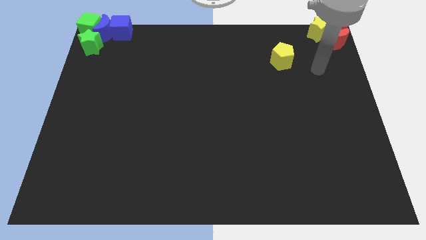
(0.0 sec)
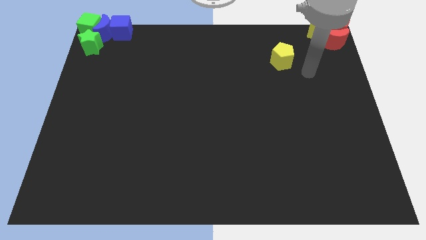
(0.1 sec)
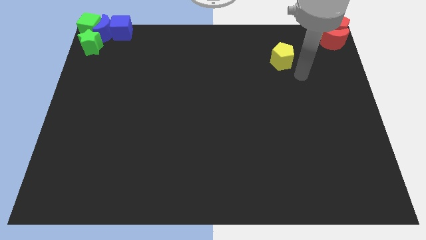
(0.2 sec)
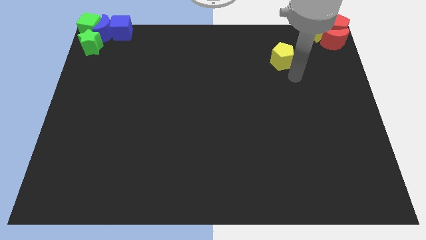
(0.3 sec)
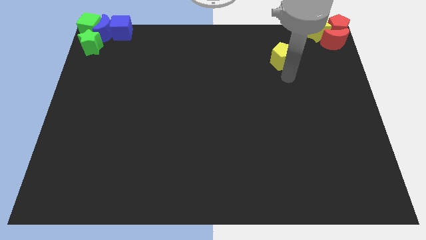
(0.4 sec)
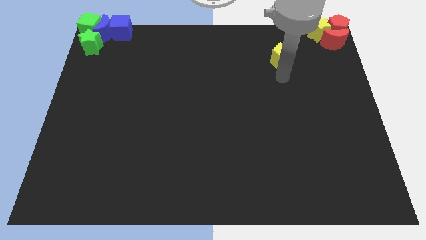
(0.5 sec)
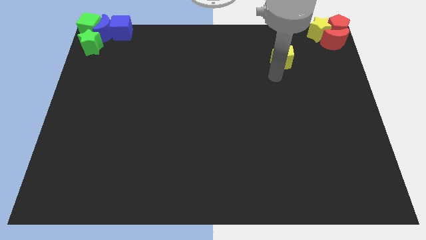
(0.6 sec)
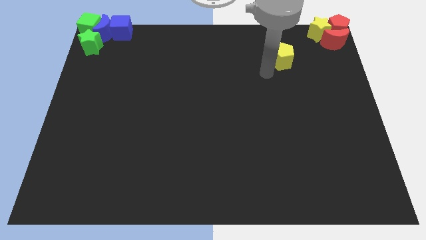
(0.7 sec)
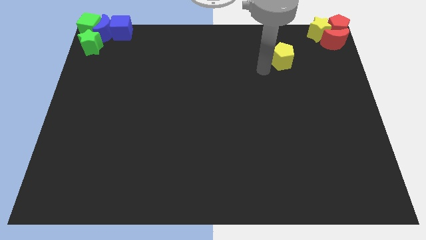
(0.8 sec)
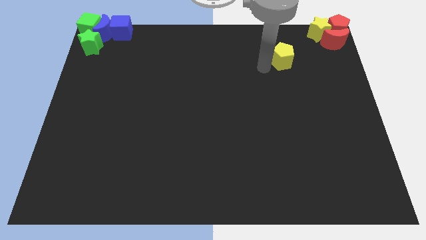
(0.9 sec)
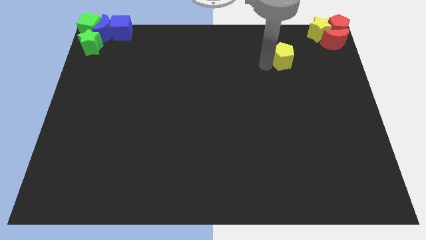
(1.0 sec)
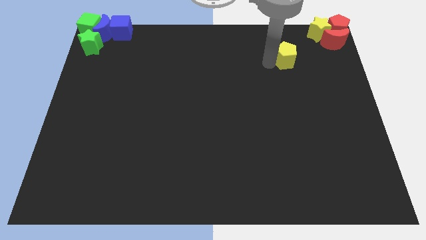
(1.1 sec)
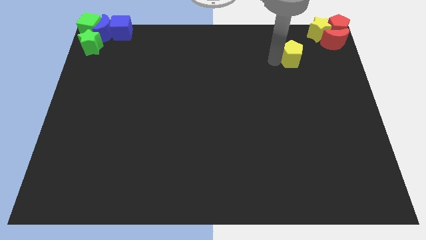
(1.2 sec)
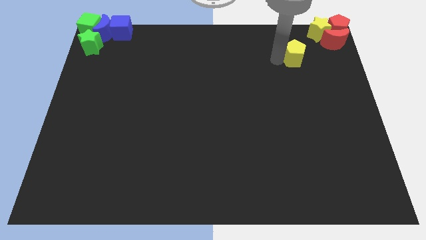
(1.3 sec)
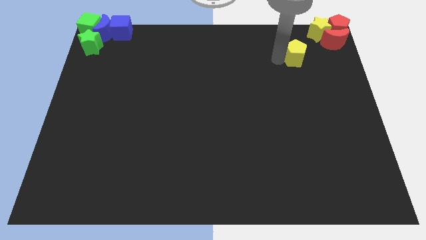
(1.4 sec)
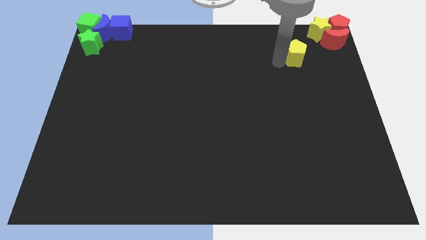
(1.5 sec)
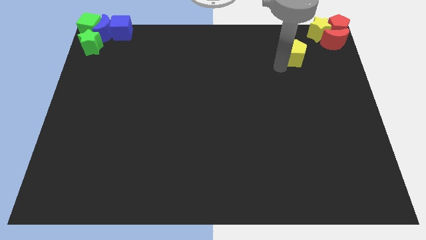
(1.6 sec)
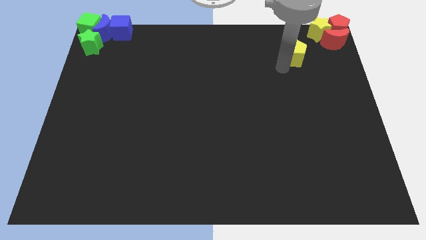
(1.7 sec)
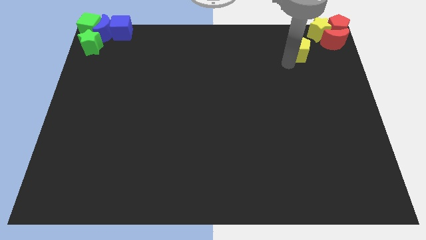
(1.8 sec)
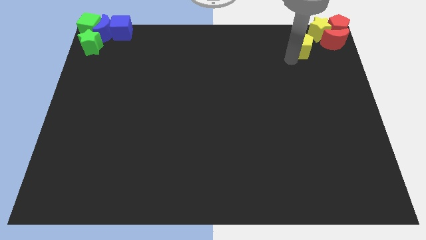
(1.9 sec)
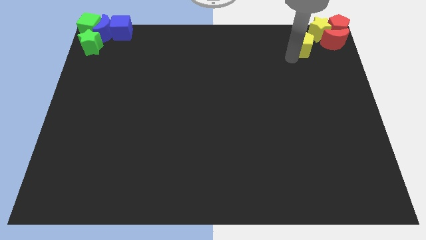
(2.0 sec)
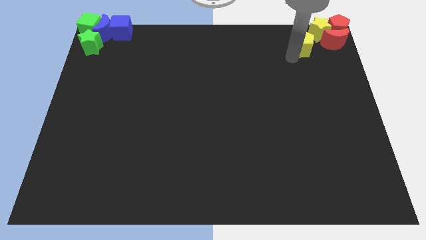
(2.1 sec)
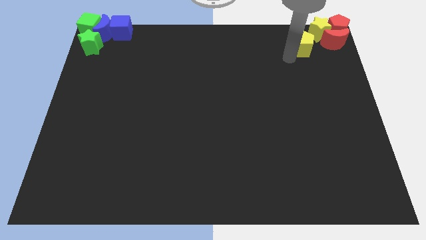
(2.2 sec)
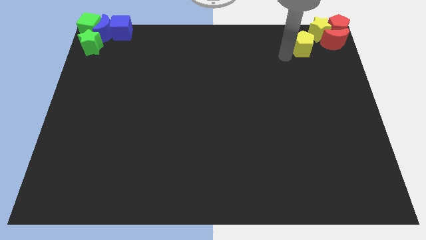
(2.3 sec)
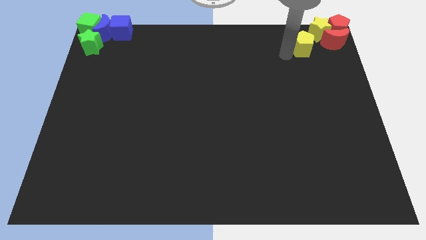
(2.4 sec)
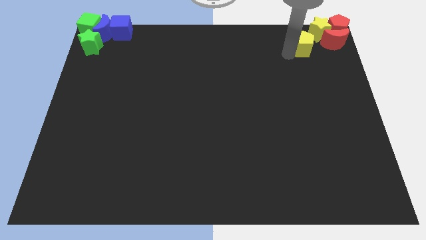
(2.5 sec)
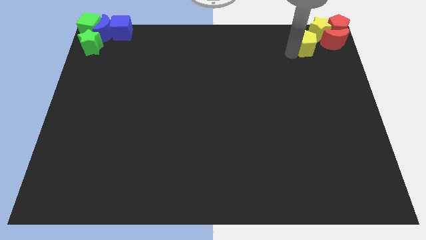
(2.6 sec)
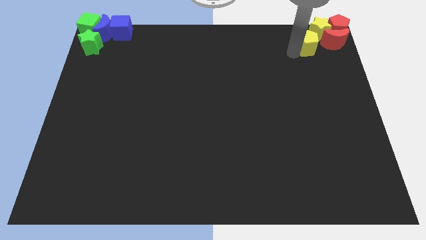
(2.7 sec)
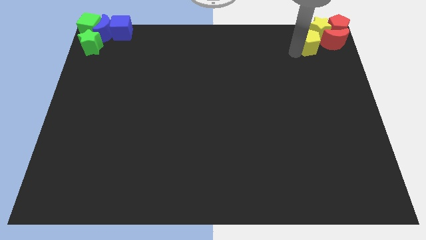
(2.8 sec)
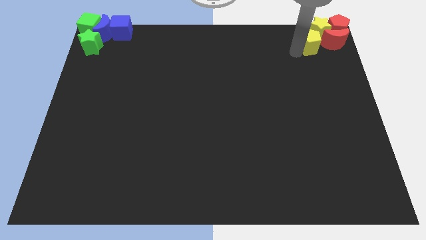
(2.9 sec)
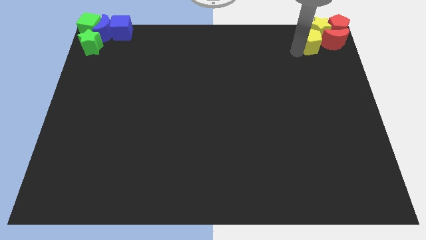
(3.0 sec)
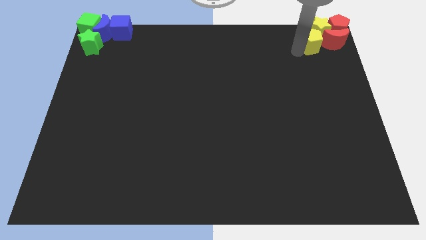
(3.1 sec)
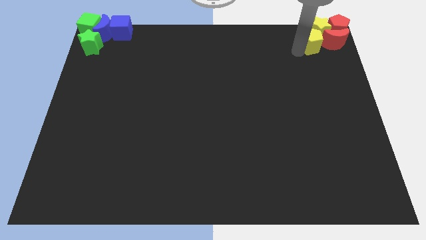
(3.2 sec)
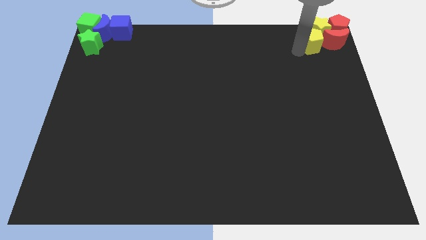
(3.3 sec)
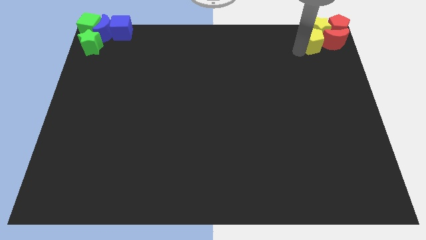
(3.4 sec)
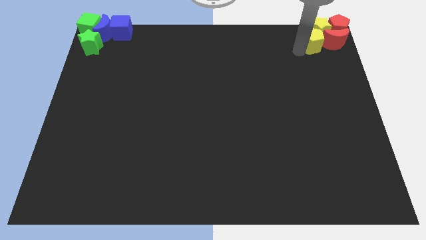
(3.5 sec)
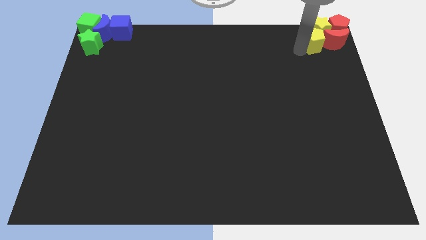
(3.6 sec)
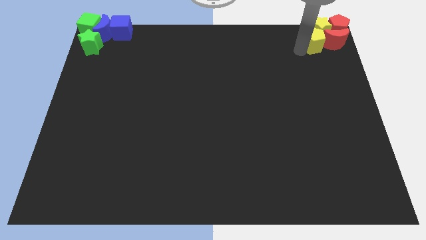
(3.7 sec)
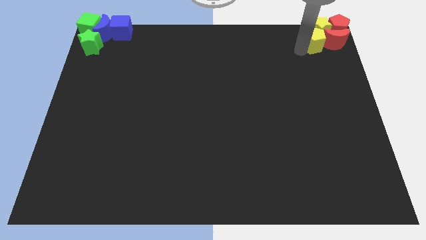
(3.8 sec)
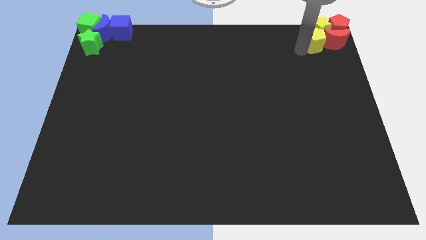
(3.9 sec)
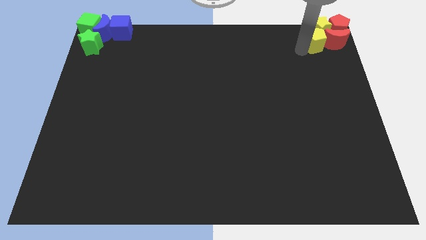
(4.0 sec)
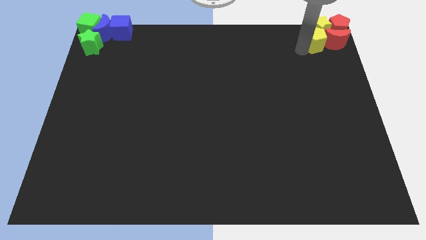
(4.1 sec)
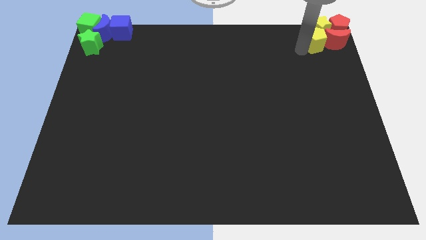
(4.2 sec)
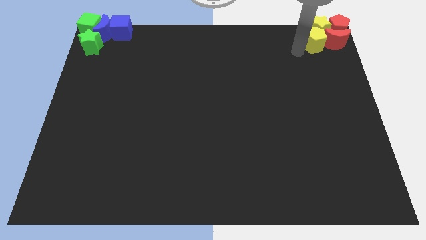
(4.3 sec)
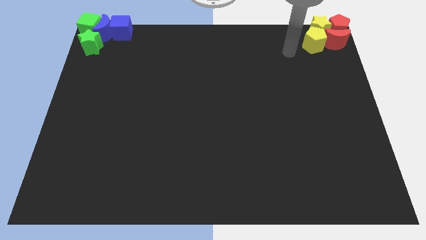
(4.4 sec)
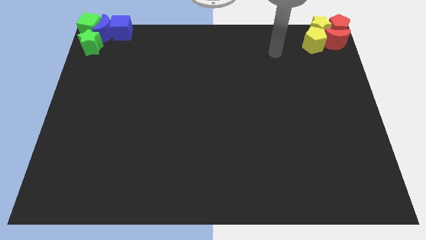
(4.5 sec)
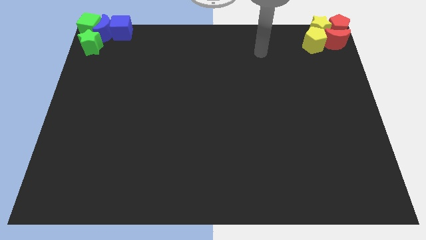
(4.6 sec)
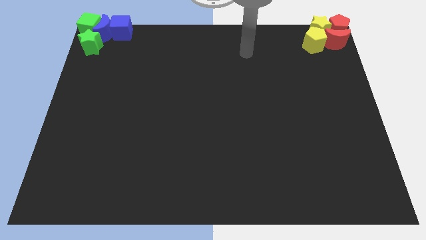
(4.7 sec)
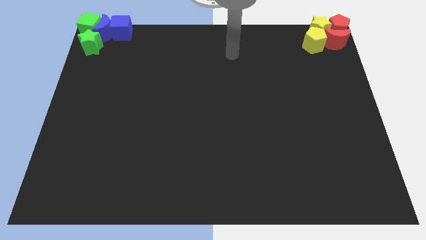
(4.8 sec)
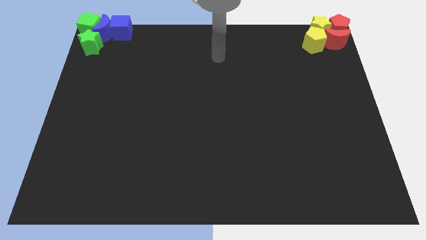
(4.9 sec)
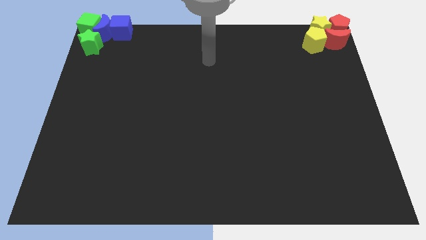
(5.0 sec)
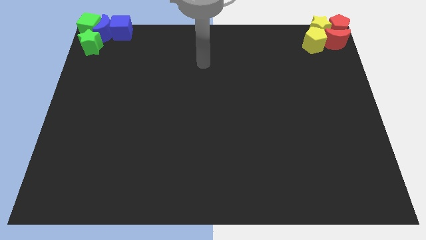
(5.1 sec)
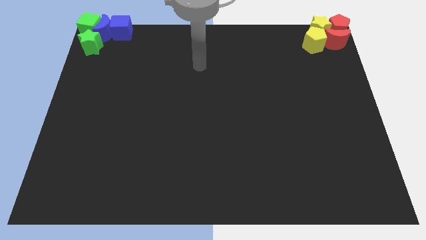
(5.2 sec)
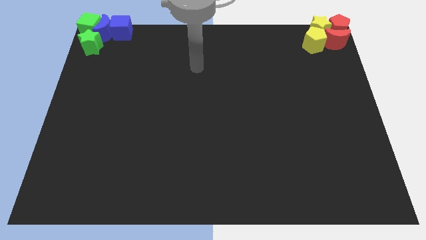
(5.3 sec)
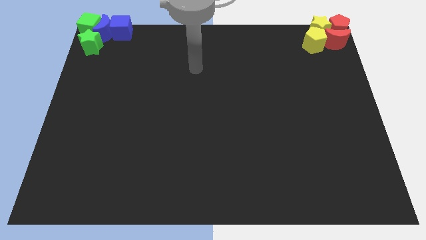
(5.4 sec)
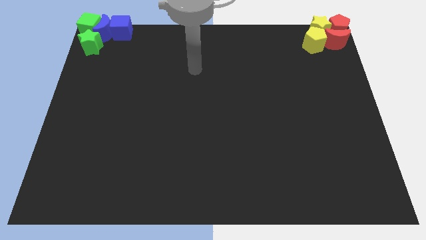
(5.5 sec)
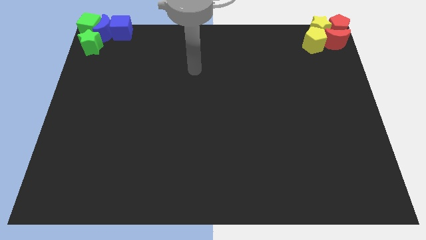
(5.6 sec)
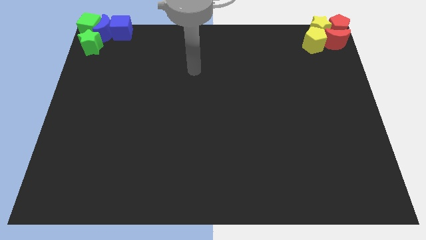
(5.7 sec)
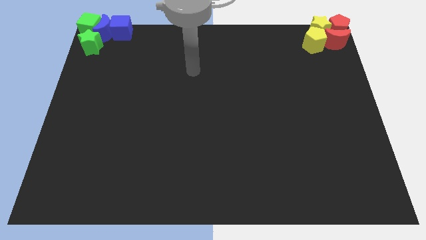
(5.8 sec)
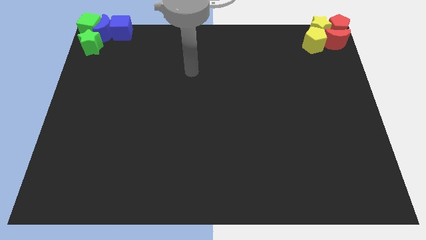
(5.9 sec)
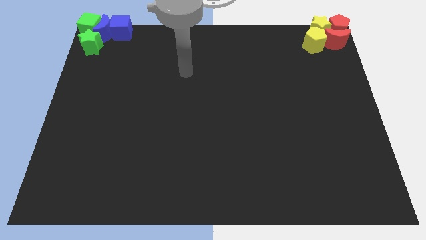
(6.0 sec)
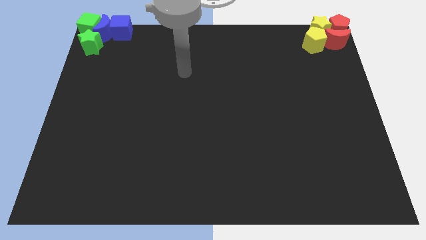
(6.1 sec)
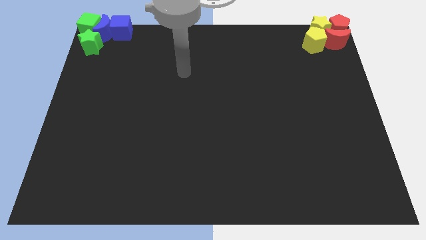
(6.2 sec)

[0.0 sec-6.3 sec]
push the yellow pentagon into the group of both the red blocks and the yellow star

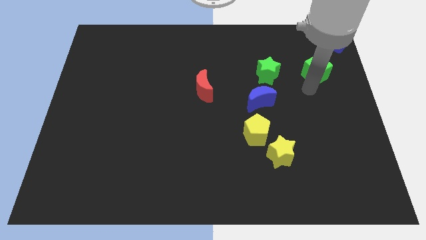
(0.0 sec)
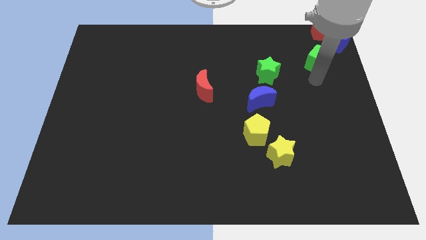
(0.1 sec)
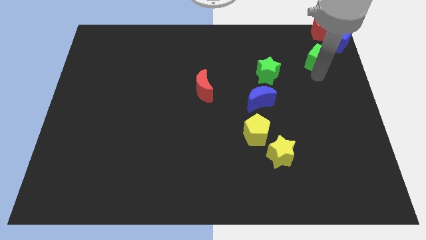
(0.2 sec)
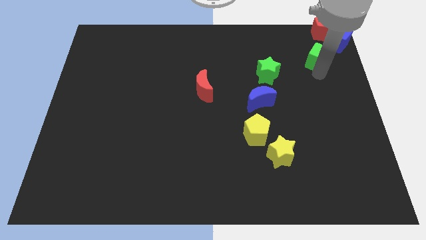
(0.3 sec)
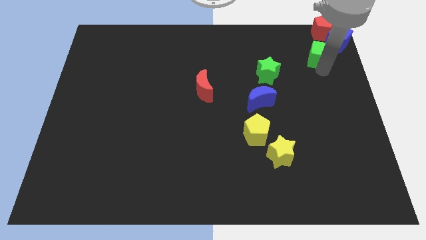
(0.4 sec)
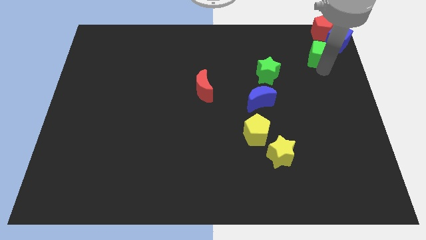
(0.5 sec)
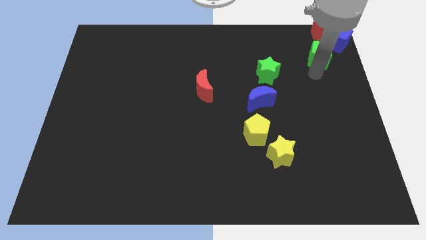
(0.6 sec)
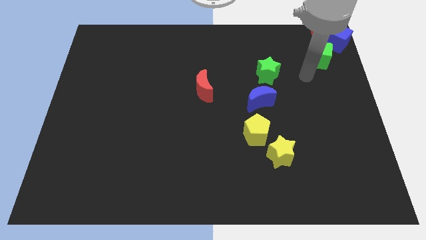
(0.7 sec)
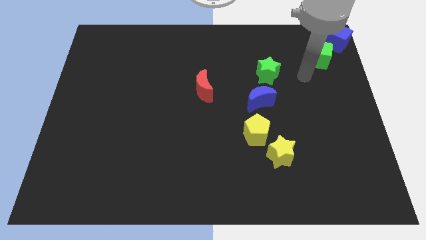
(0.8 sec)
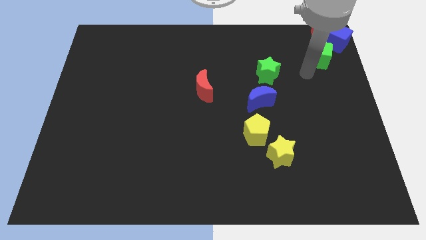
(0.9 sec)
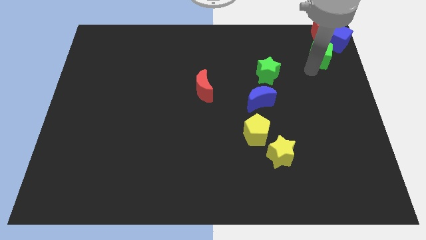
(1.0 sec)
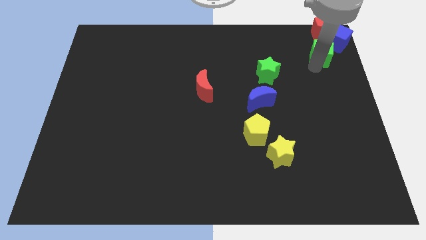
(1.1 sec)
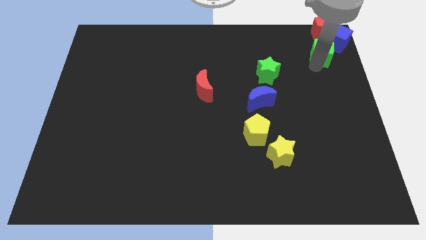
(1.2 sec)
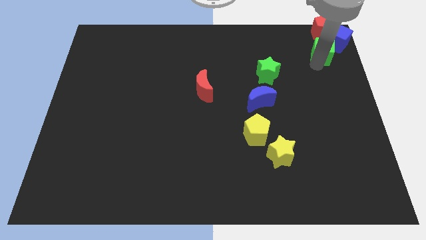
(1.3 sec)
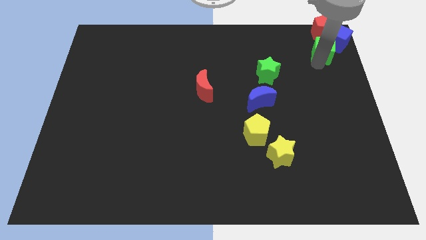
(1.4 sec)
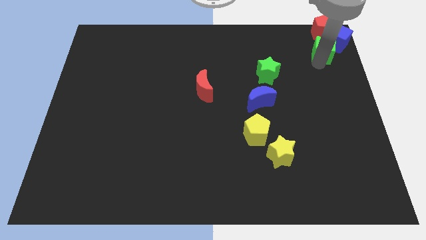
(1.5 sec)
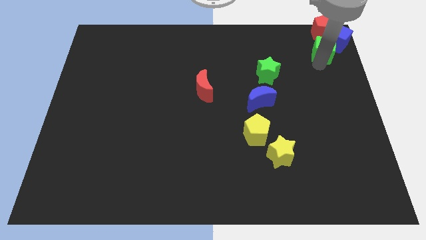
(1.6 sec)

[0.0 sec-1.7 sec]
push the green cube close to the blue cube

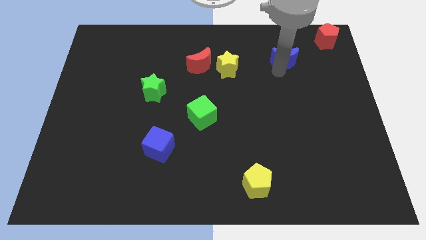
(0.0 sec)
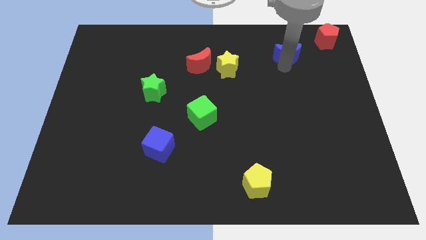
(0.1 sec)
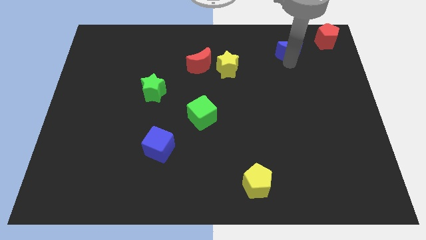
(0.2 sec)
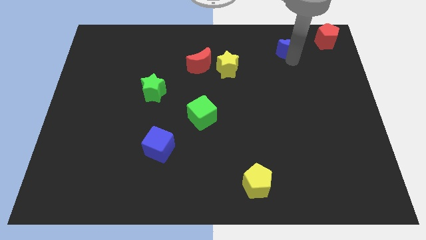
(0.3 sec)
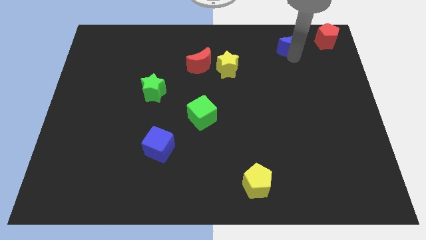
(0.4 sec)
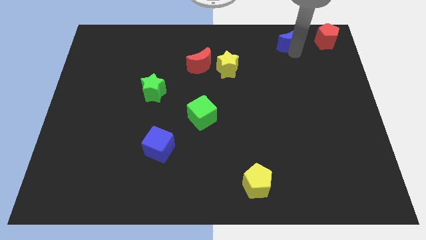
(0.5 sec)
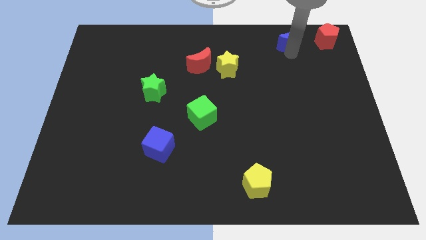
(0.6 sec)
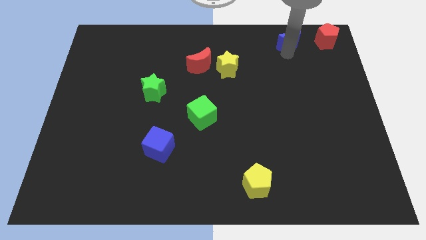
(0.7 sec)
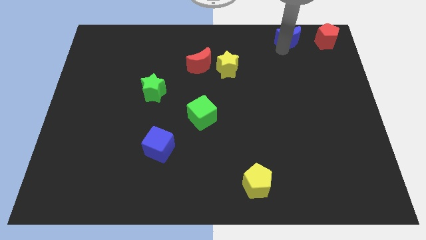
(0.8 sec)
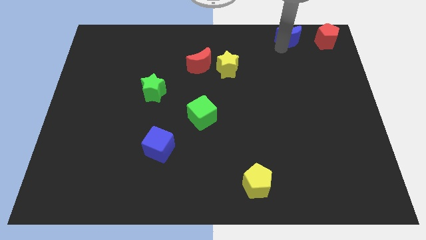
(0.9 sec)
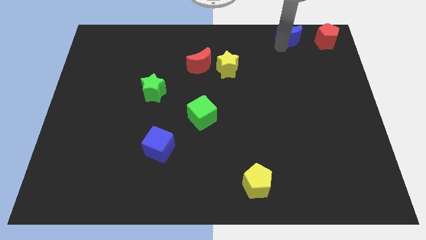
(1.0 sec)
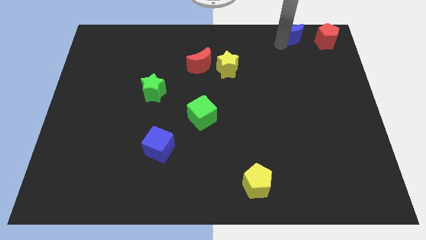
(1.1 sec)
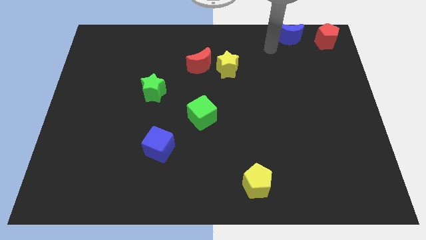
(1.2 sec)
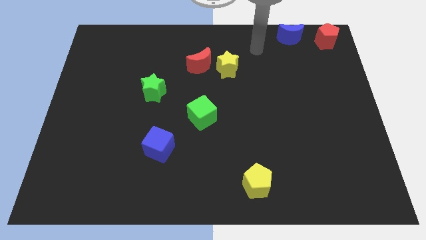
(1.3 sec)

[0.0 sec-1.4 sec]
move the blue moon to the left of the red pentagon
